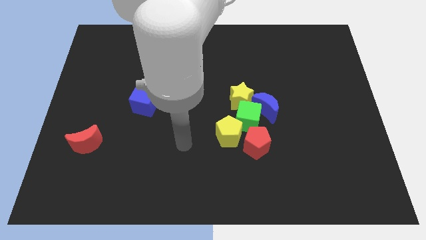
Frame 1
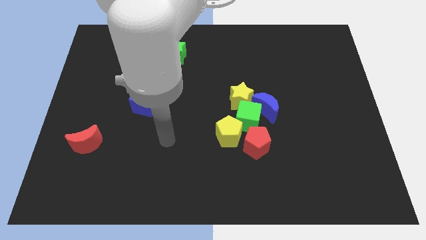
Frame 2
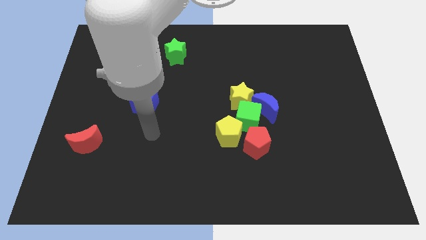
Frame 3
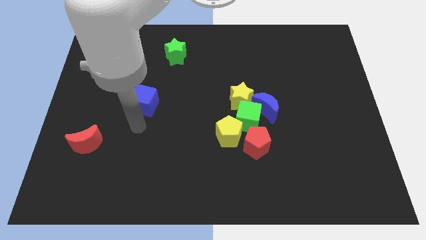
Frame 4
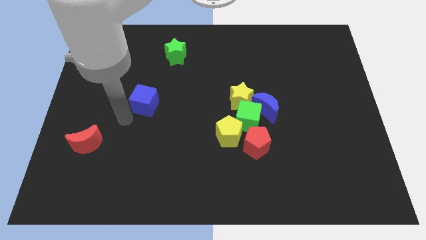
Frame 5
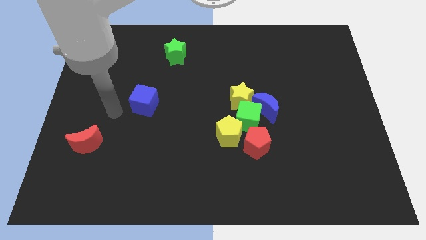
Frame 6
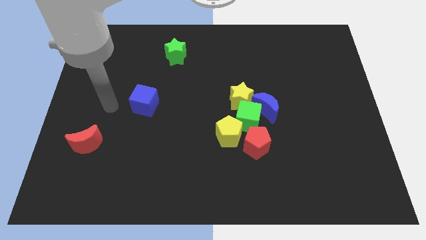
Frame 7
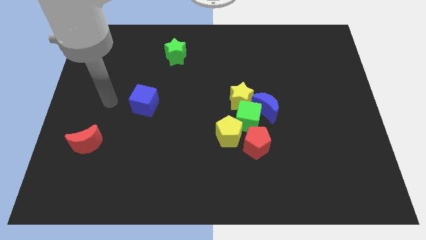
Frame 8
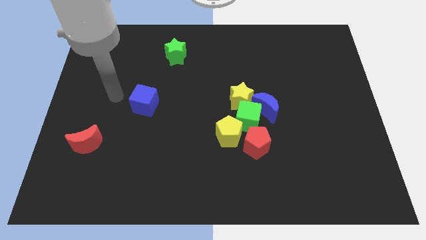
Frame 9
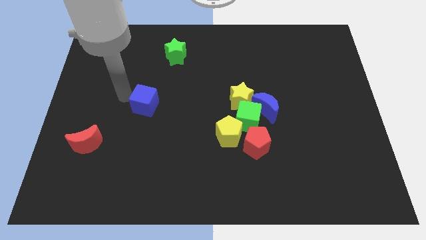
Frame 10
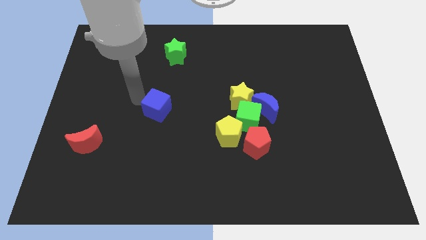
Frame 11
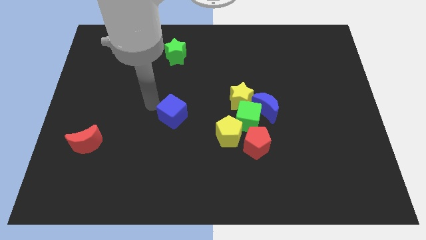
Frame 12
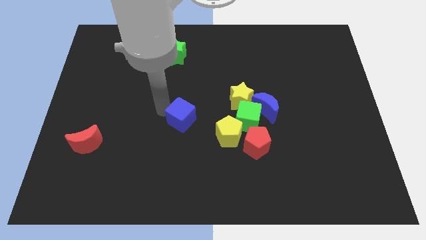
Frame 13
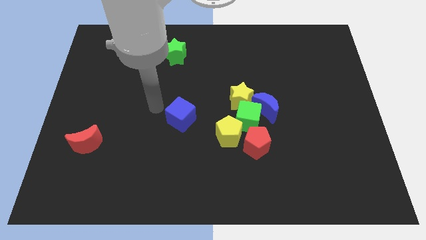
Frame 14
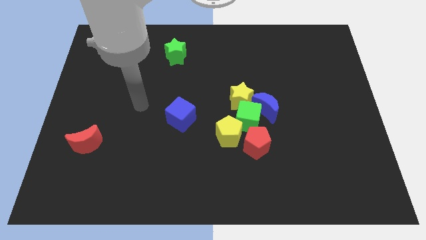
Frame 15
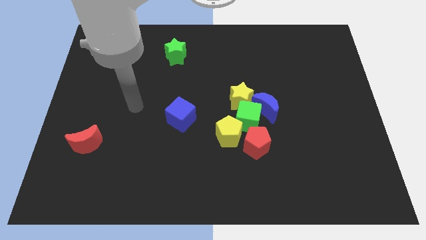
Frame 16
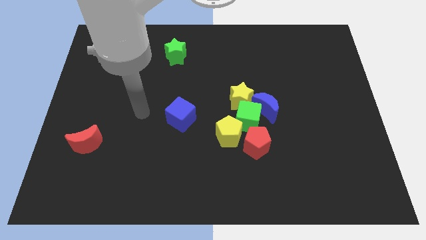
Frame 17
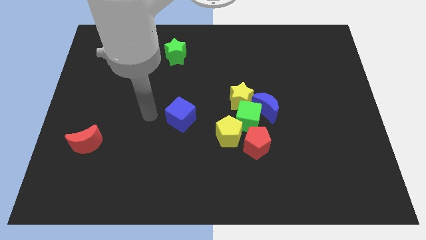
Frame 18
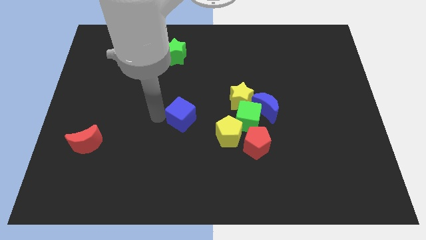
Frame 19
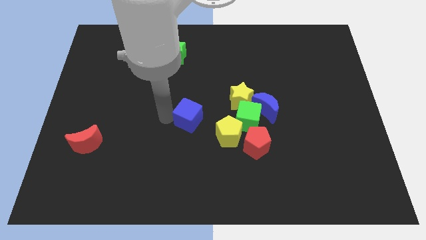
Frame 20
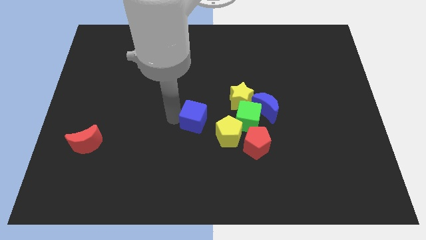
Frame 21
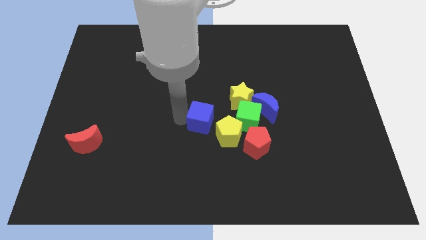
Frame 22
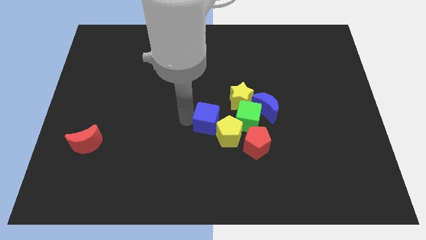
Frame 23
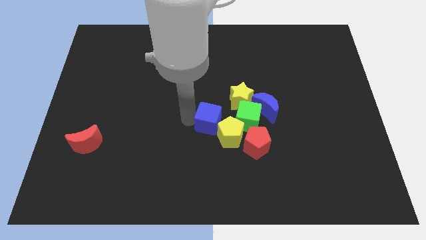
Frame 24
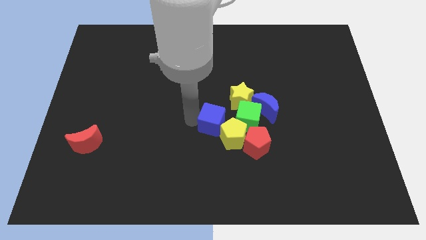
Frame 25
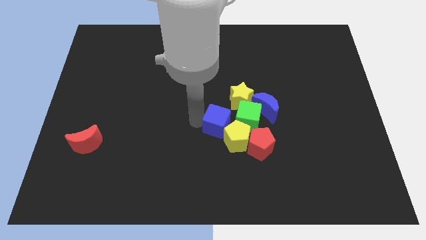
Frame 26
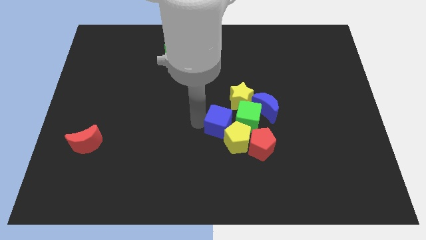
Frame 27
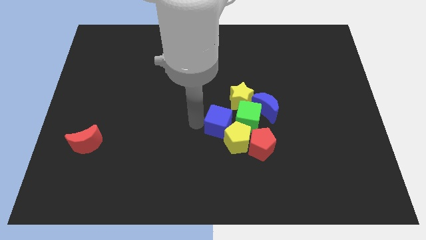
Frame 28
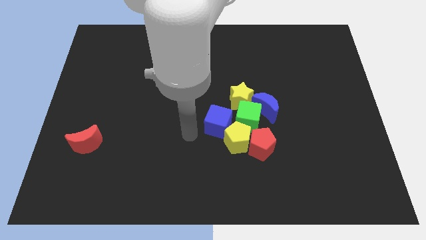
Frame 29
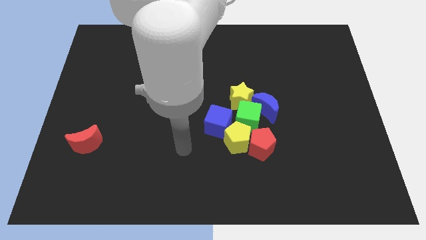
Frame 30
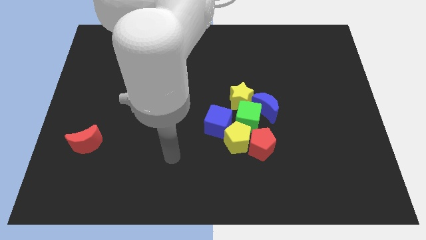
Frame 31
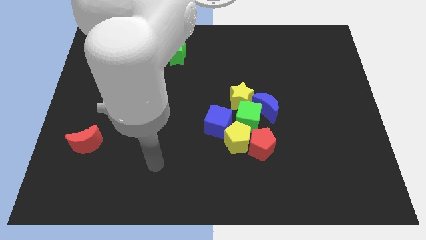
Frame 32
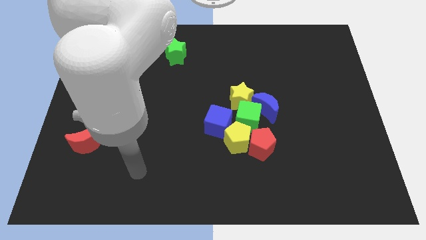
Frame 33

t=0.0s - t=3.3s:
push the blue cube into group of blocks

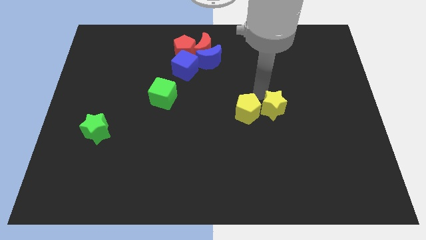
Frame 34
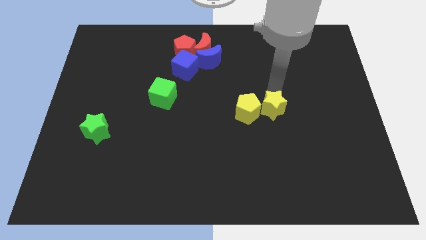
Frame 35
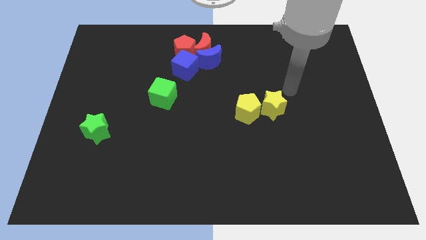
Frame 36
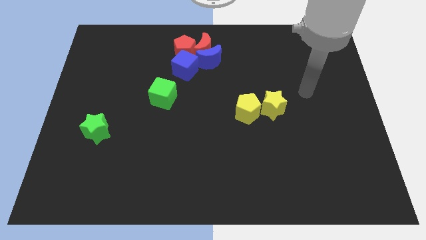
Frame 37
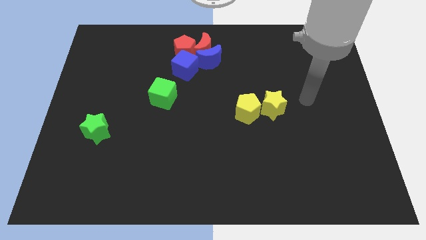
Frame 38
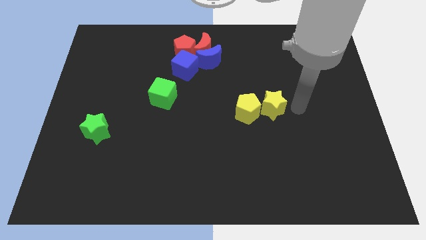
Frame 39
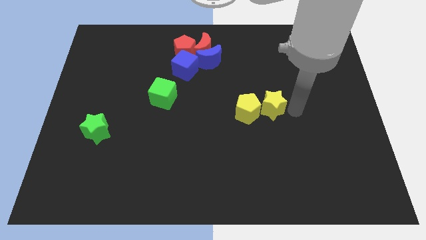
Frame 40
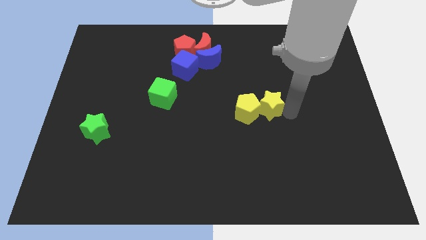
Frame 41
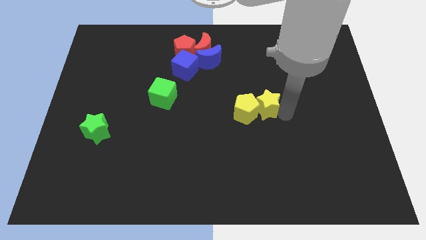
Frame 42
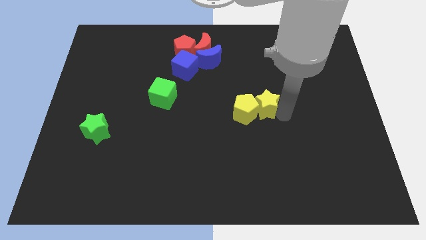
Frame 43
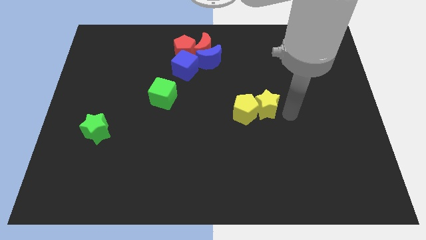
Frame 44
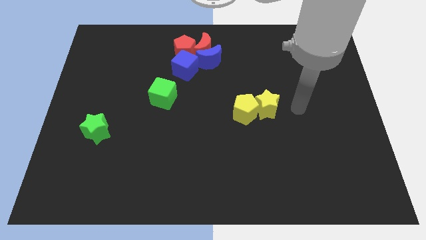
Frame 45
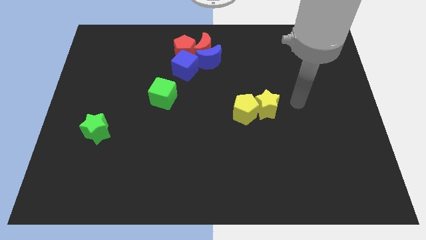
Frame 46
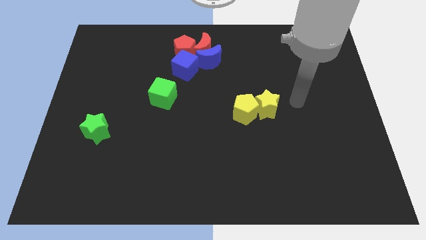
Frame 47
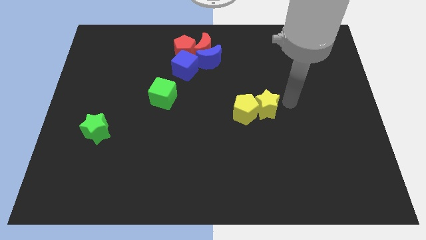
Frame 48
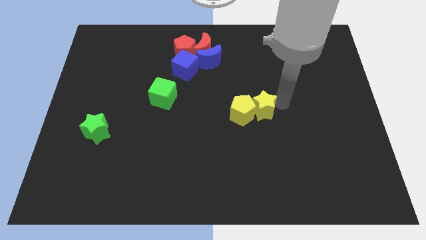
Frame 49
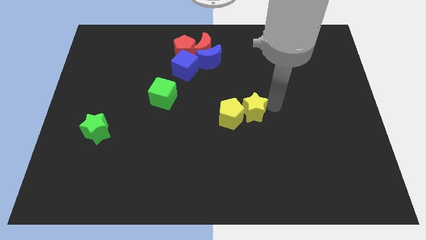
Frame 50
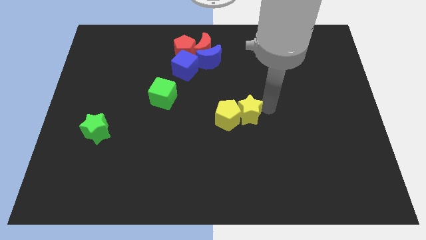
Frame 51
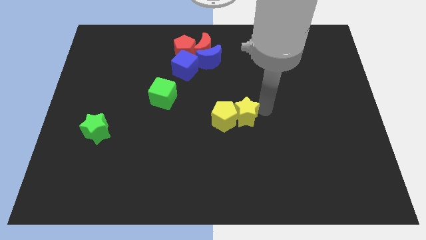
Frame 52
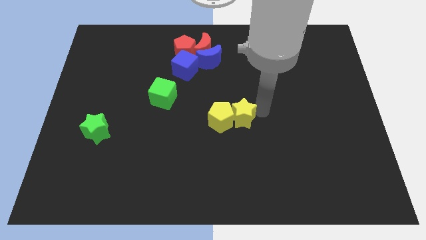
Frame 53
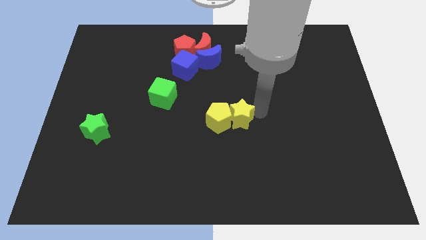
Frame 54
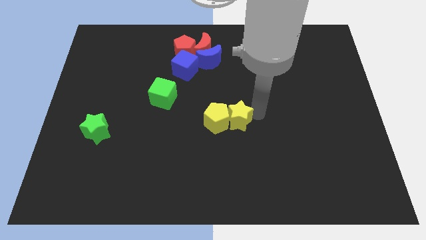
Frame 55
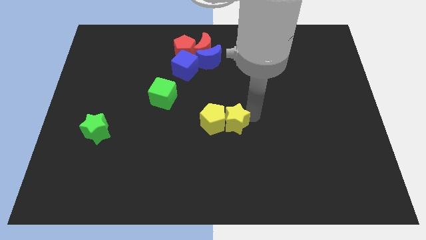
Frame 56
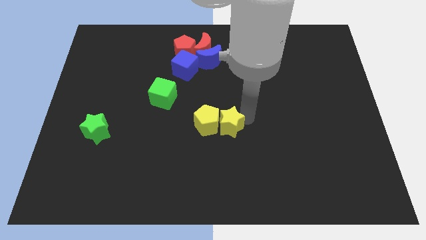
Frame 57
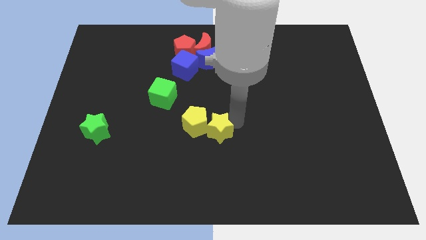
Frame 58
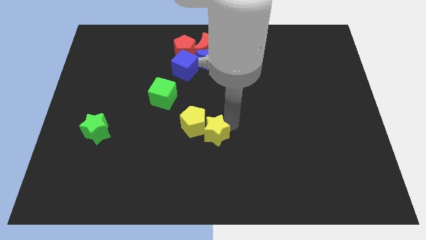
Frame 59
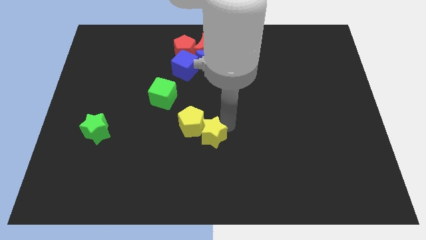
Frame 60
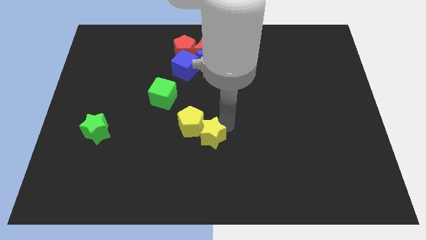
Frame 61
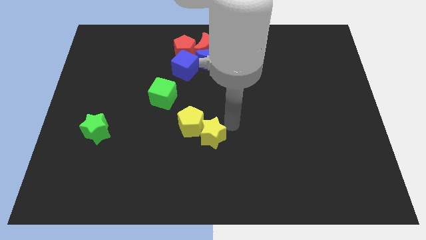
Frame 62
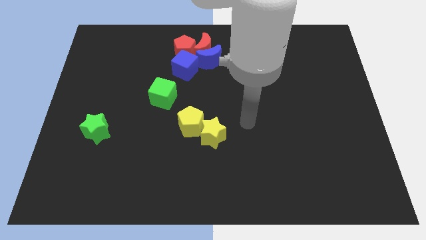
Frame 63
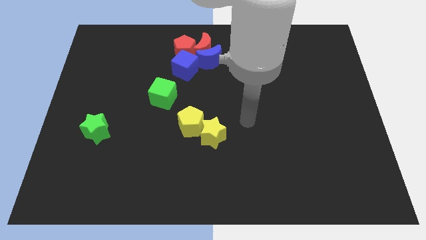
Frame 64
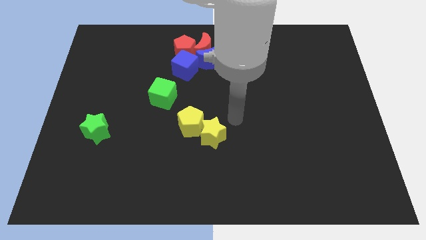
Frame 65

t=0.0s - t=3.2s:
slide the group of yellow blocks at the bottom right of the green cube

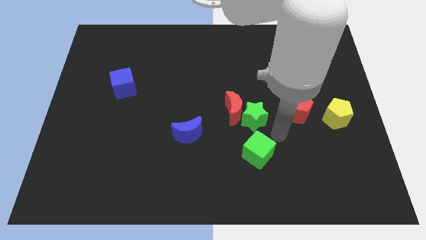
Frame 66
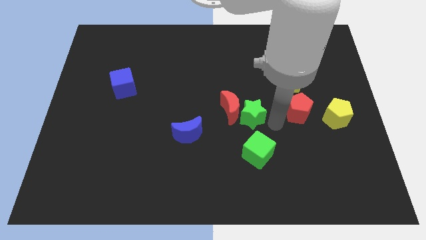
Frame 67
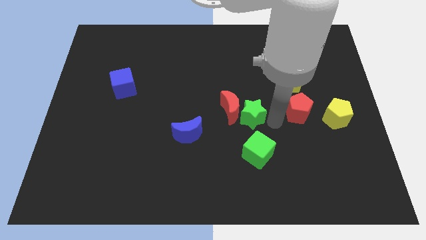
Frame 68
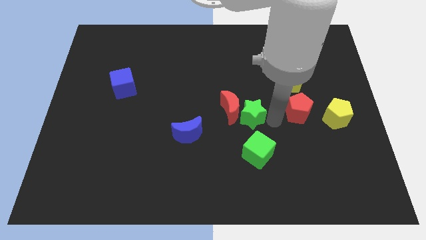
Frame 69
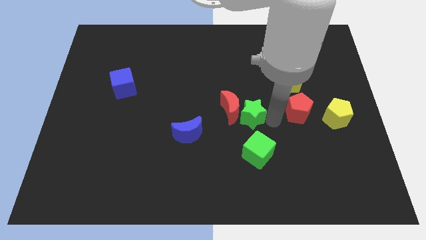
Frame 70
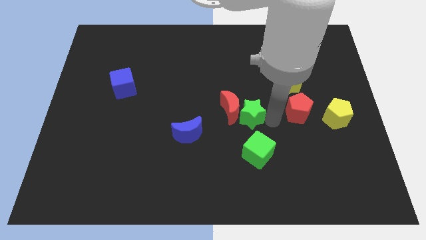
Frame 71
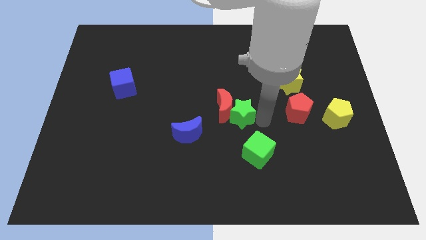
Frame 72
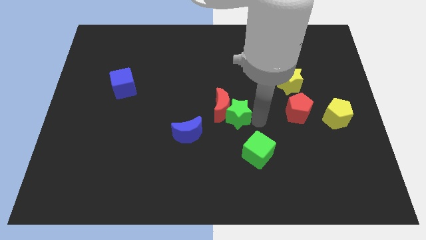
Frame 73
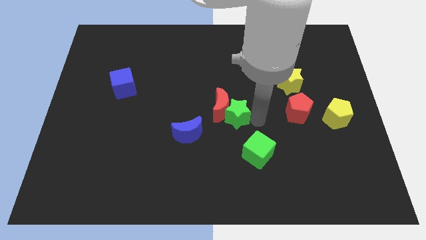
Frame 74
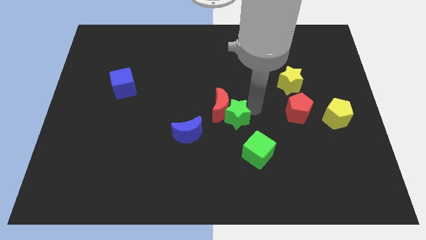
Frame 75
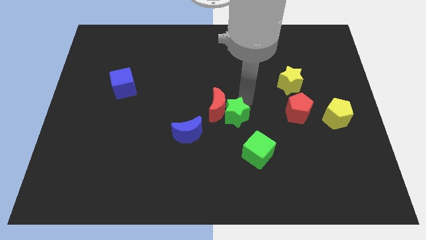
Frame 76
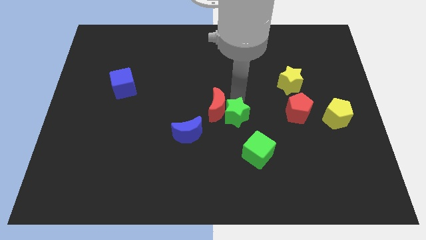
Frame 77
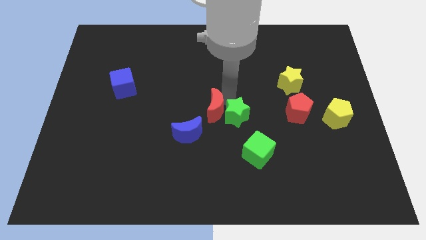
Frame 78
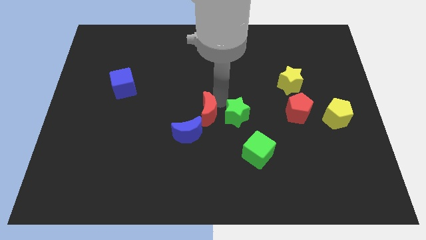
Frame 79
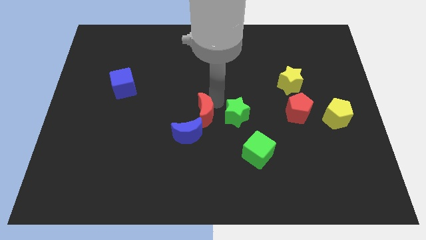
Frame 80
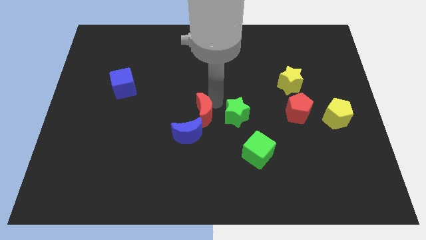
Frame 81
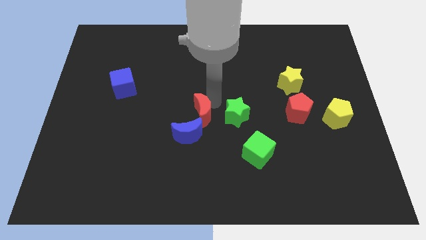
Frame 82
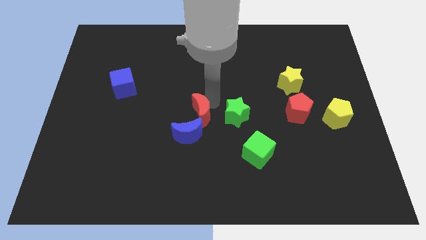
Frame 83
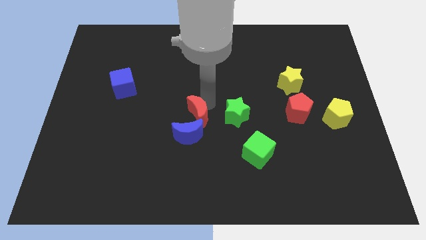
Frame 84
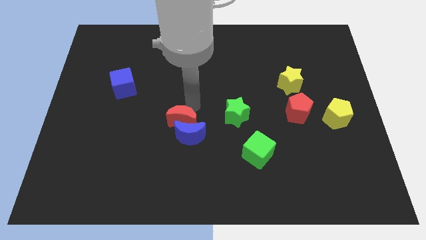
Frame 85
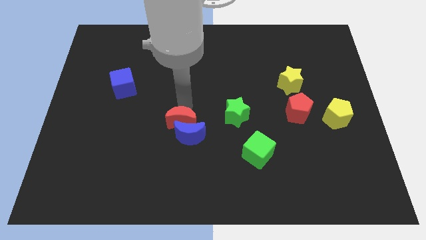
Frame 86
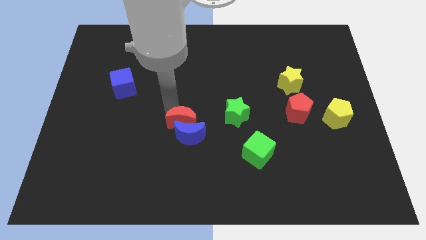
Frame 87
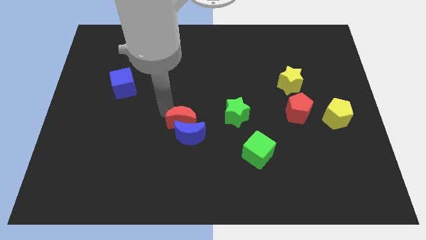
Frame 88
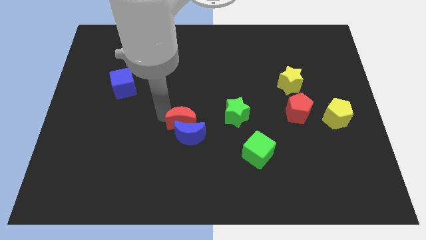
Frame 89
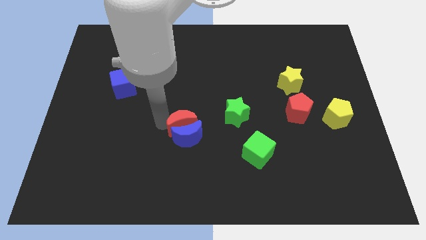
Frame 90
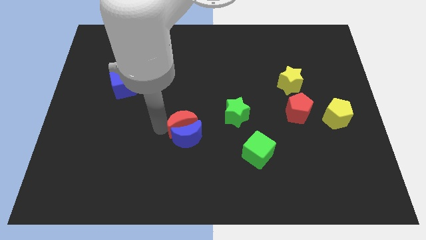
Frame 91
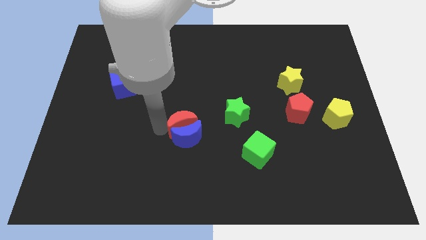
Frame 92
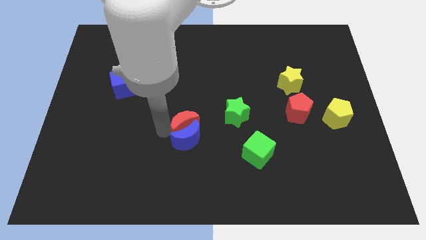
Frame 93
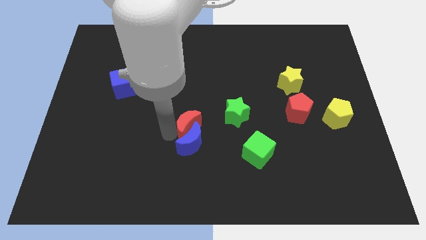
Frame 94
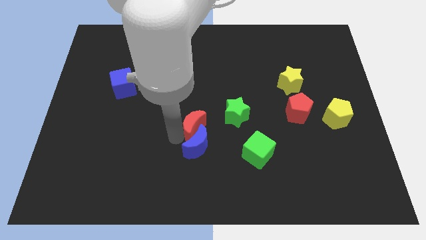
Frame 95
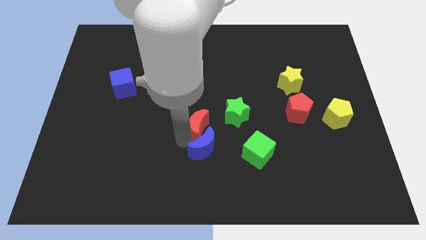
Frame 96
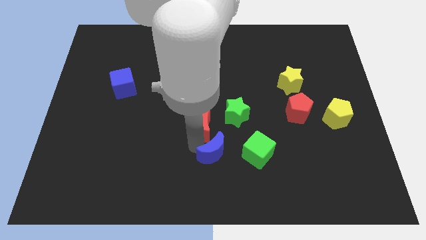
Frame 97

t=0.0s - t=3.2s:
separate the red moon and green star
